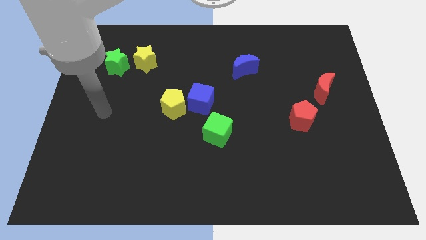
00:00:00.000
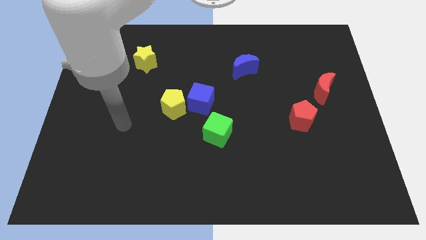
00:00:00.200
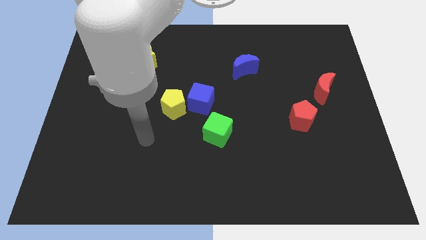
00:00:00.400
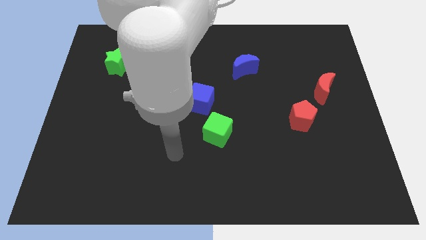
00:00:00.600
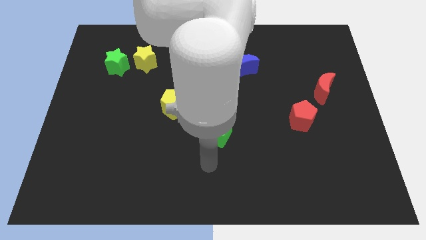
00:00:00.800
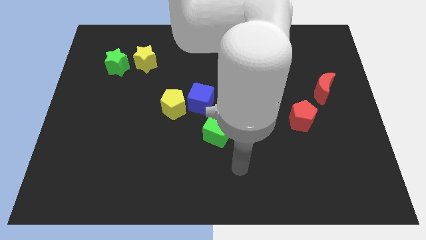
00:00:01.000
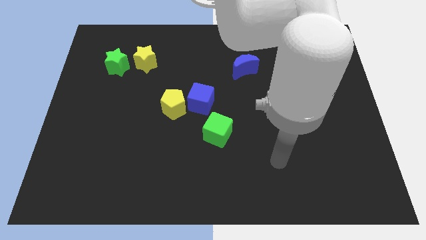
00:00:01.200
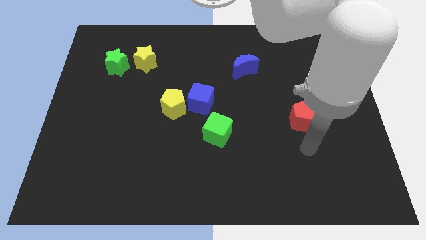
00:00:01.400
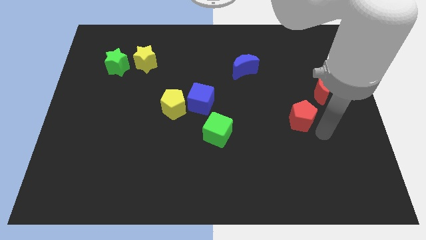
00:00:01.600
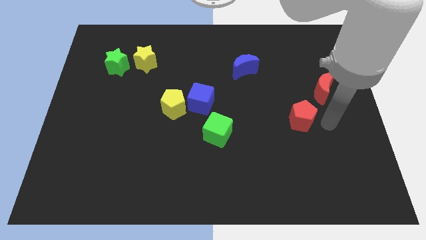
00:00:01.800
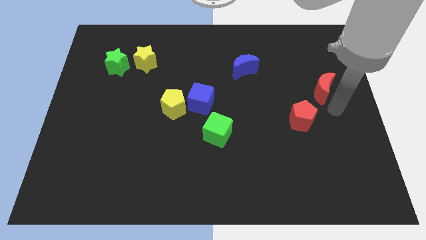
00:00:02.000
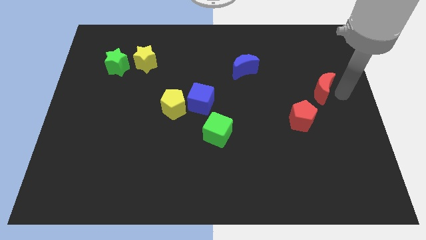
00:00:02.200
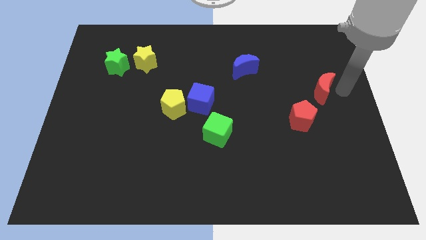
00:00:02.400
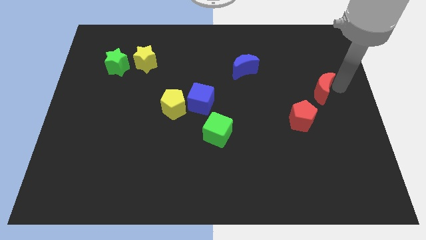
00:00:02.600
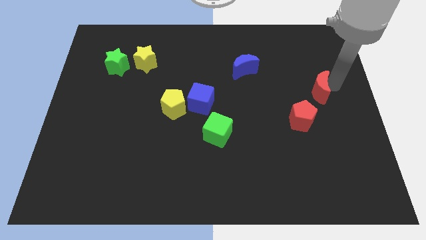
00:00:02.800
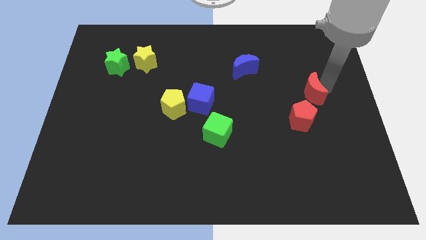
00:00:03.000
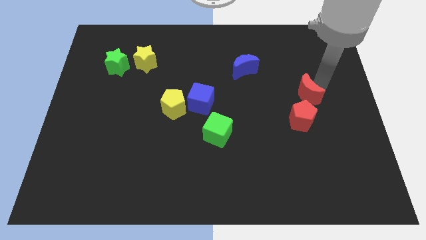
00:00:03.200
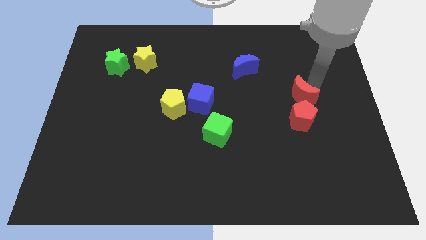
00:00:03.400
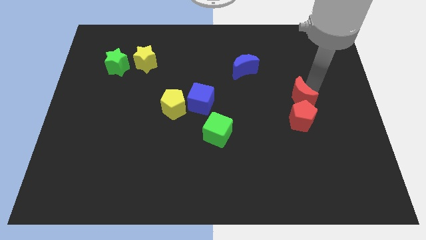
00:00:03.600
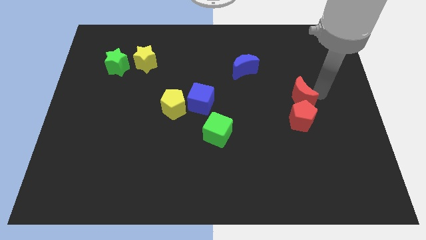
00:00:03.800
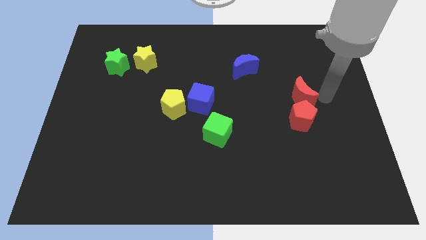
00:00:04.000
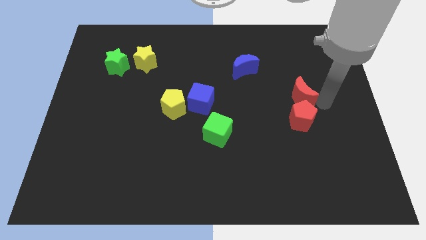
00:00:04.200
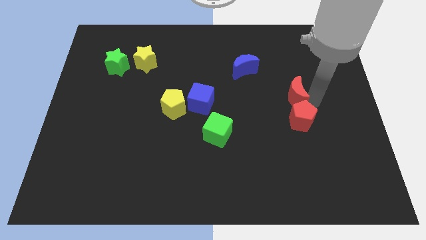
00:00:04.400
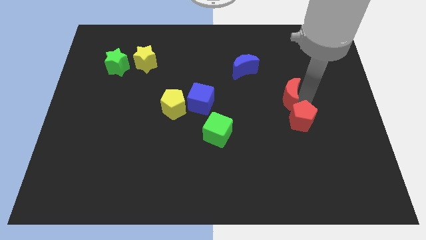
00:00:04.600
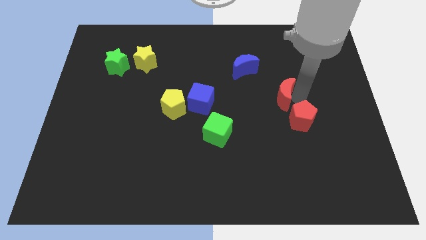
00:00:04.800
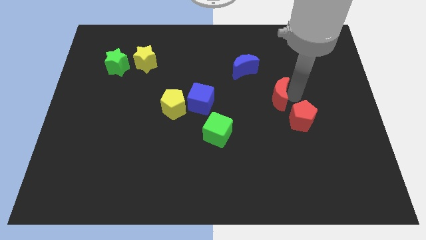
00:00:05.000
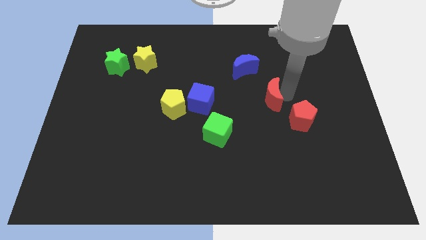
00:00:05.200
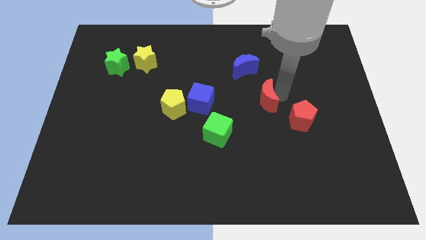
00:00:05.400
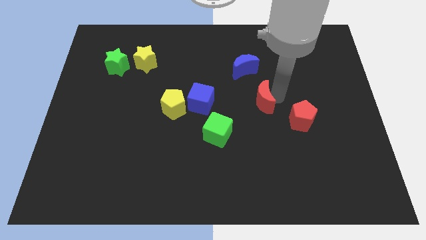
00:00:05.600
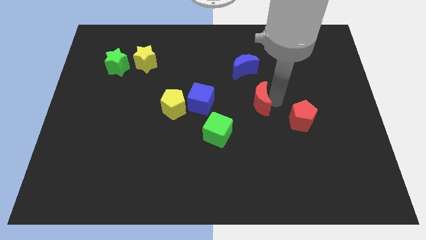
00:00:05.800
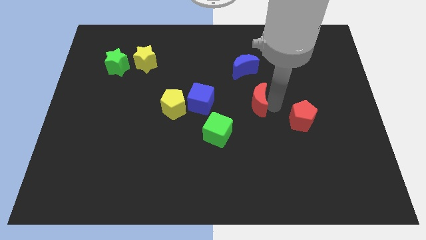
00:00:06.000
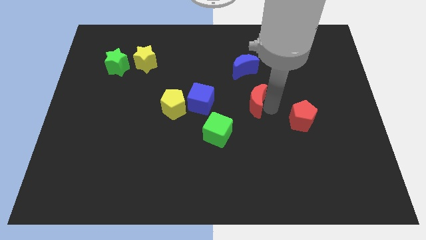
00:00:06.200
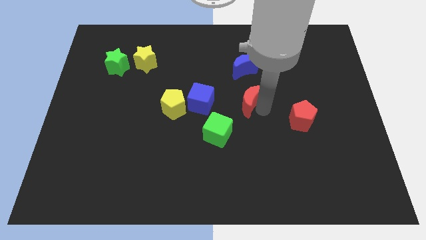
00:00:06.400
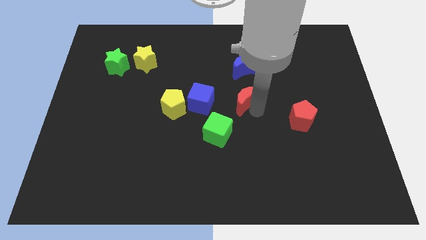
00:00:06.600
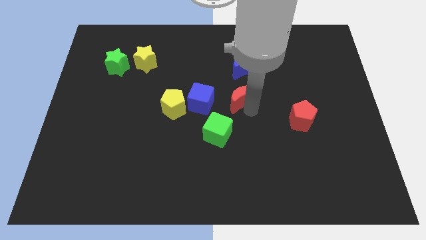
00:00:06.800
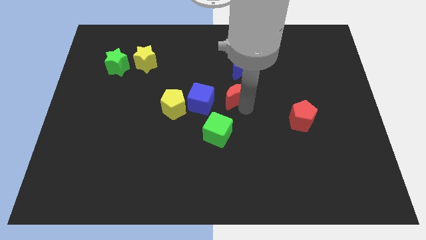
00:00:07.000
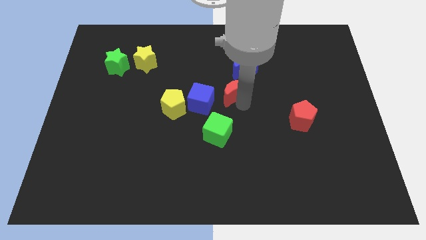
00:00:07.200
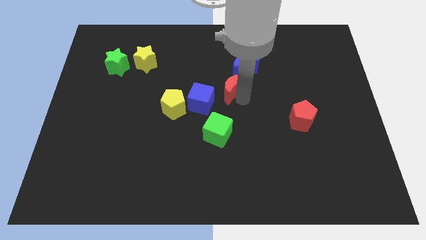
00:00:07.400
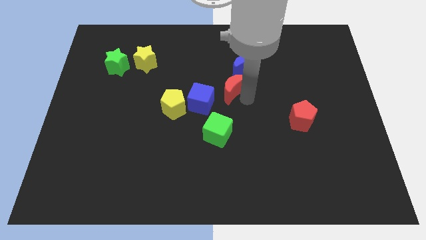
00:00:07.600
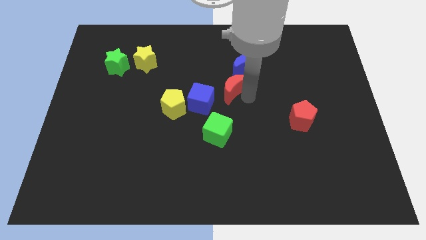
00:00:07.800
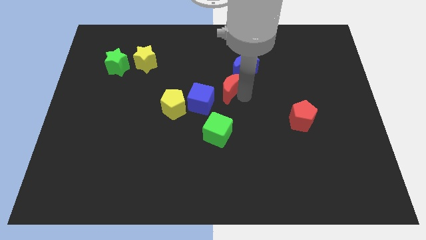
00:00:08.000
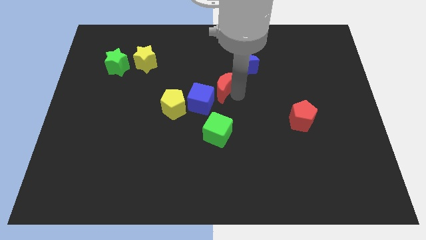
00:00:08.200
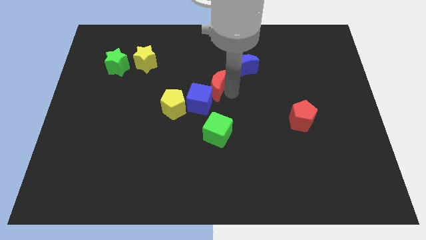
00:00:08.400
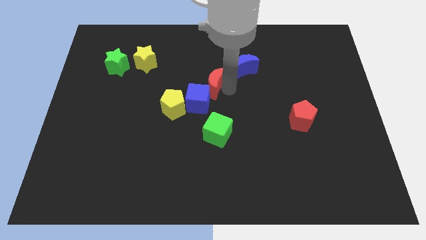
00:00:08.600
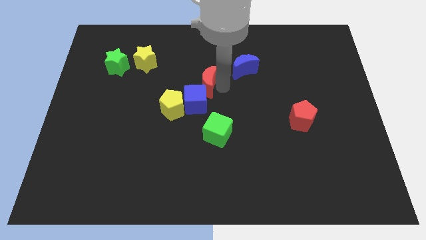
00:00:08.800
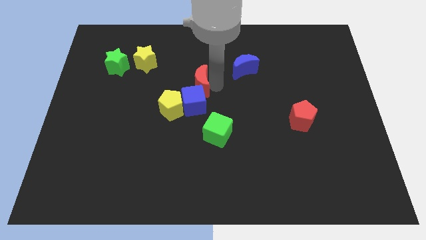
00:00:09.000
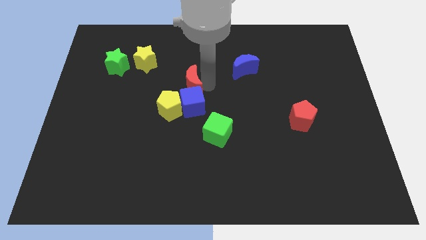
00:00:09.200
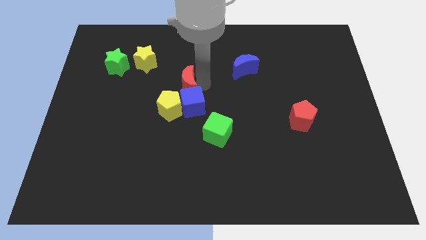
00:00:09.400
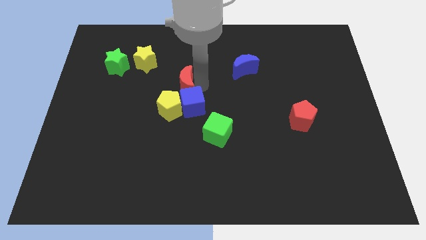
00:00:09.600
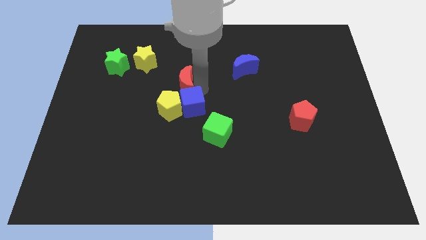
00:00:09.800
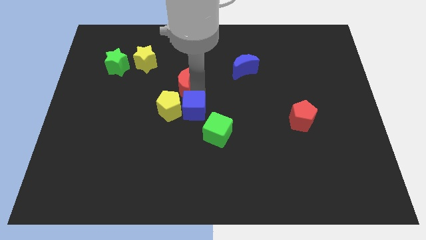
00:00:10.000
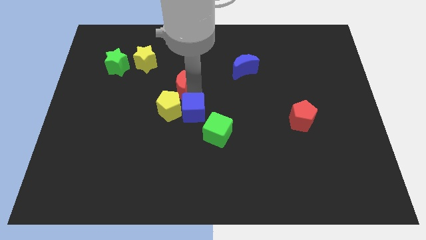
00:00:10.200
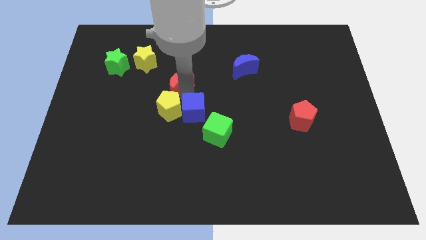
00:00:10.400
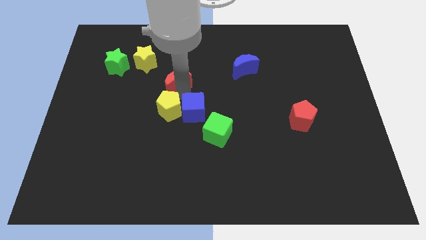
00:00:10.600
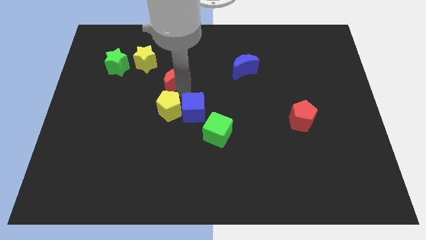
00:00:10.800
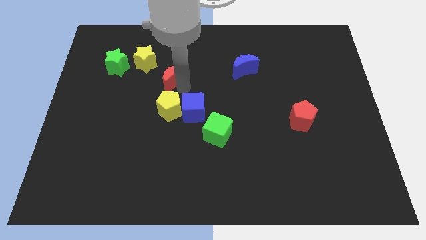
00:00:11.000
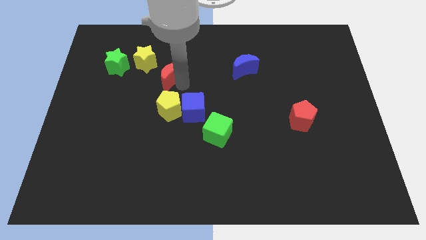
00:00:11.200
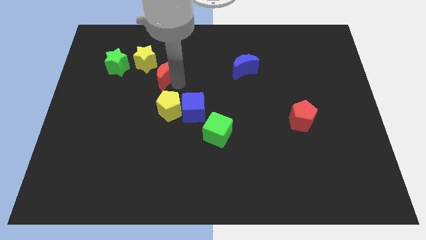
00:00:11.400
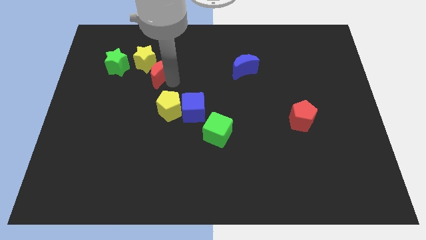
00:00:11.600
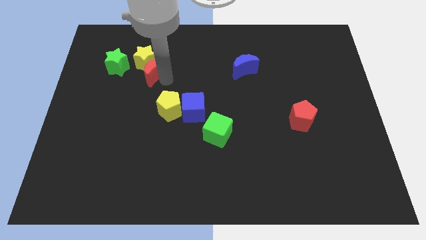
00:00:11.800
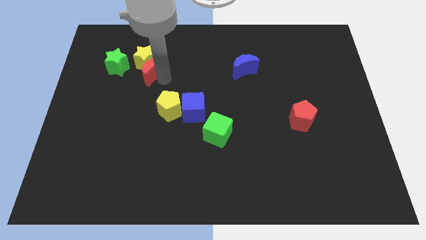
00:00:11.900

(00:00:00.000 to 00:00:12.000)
move the red moon close to the yellow star

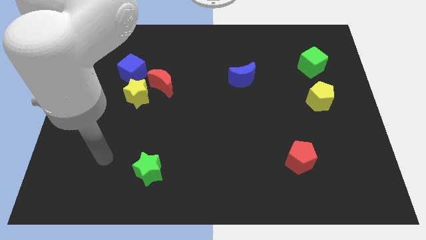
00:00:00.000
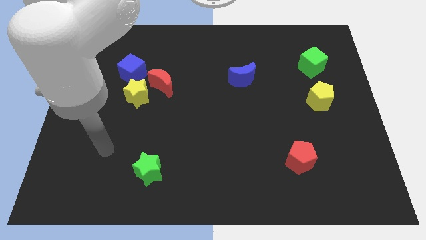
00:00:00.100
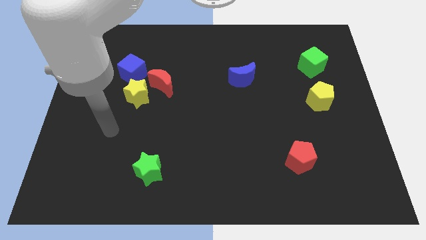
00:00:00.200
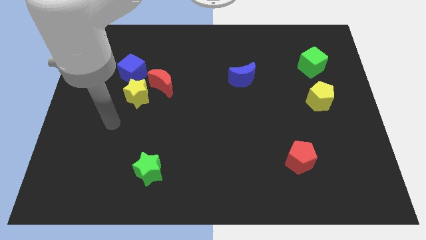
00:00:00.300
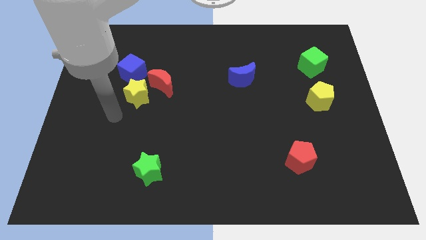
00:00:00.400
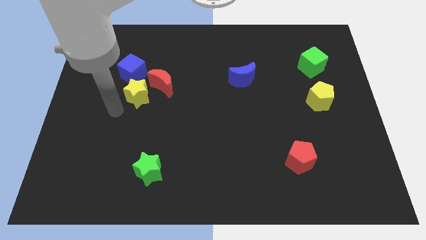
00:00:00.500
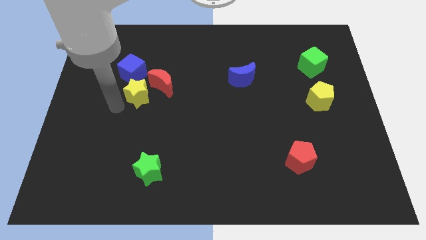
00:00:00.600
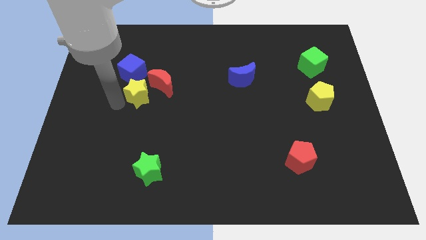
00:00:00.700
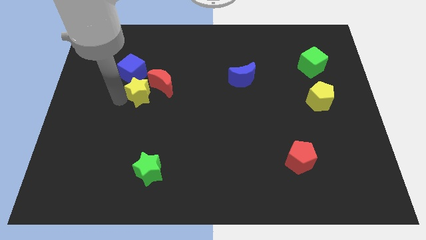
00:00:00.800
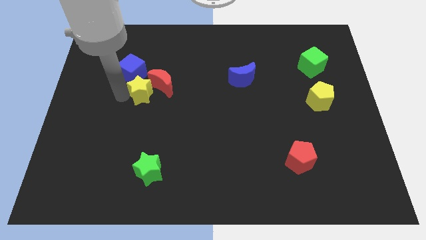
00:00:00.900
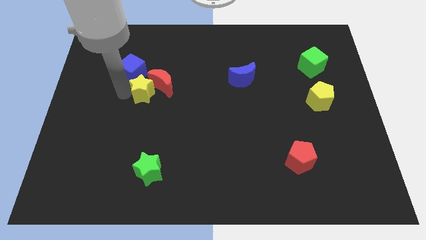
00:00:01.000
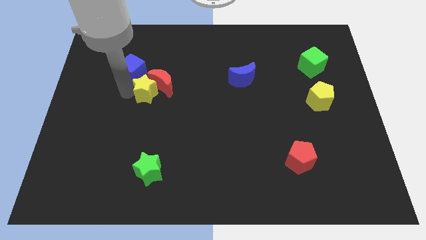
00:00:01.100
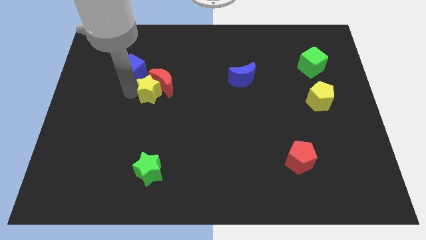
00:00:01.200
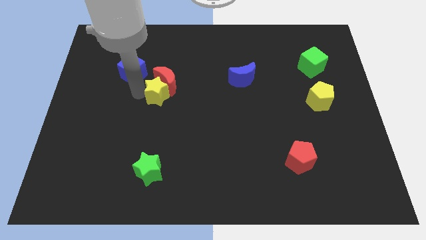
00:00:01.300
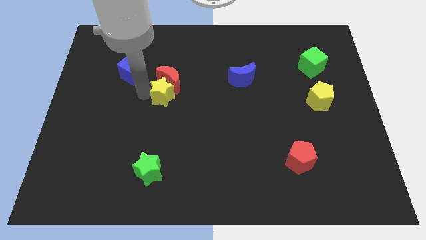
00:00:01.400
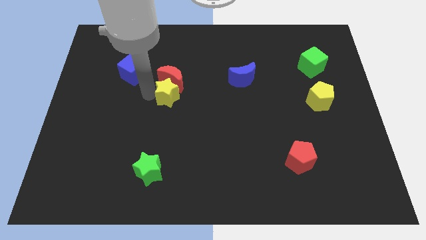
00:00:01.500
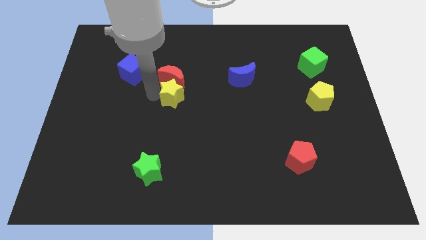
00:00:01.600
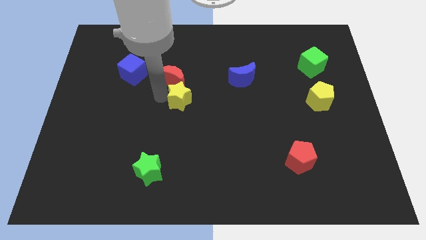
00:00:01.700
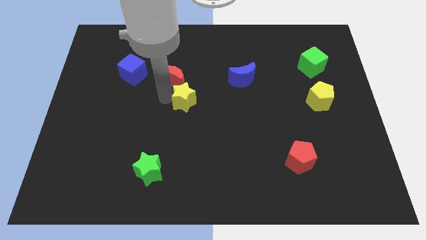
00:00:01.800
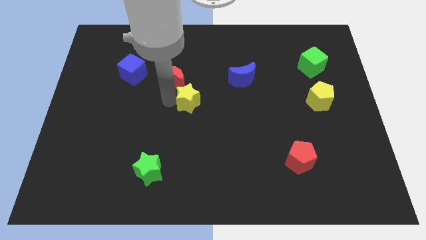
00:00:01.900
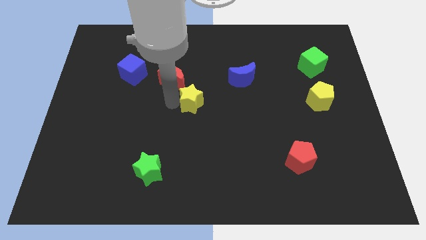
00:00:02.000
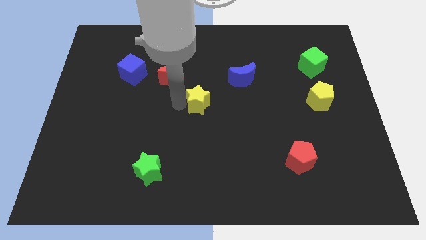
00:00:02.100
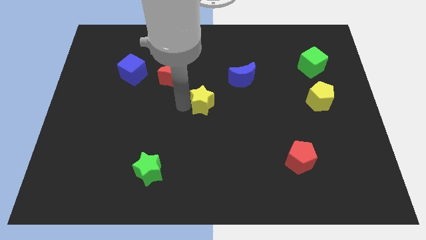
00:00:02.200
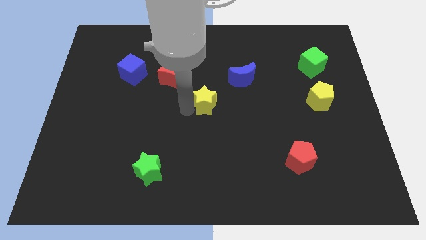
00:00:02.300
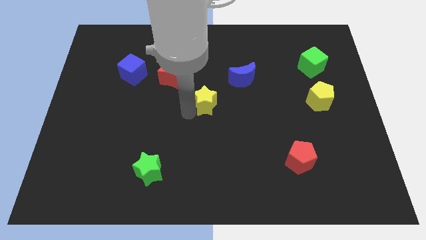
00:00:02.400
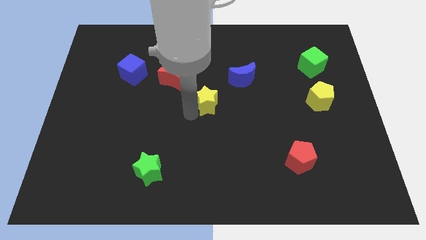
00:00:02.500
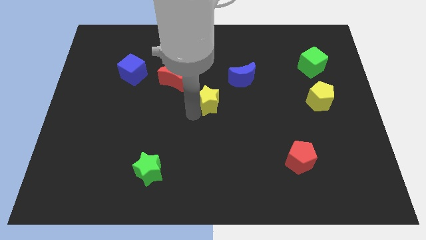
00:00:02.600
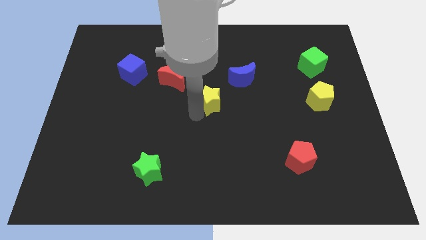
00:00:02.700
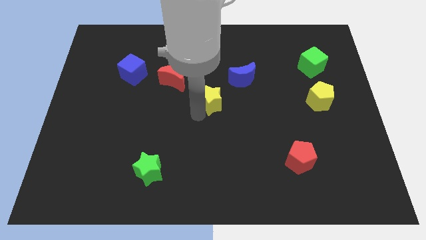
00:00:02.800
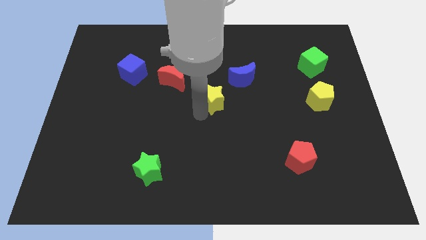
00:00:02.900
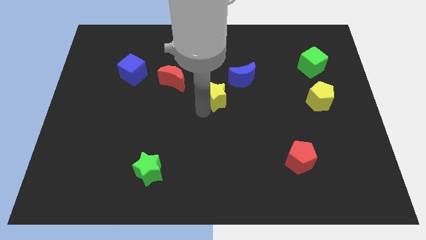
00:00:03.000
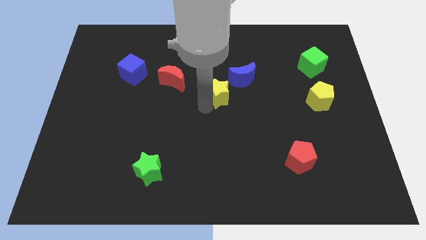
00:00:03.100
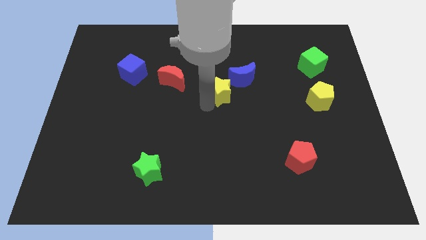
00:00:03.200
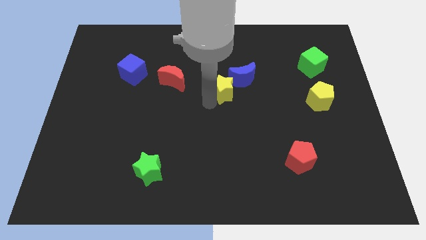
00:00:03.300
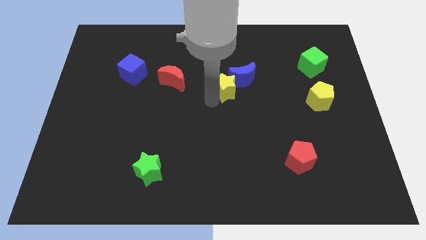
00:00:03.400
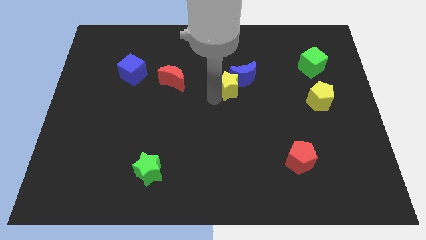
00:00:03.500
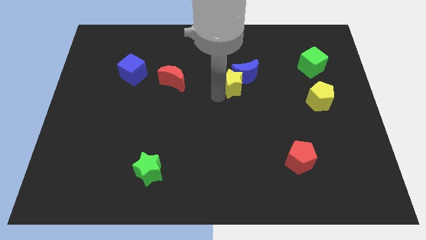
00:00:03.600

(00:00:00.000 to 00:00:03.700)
move the yellow star towards the blue moon
